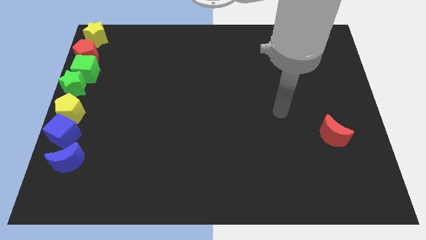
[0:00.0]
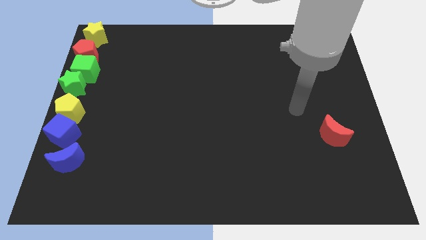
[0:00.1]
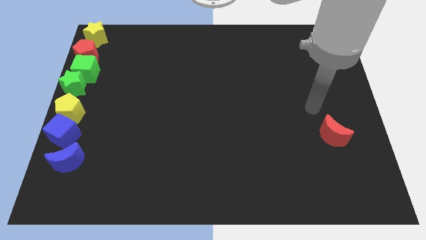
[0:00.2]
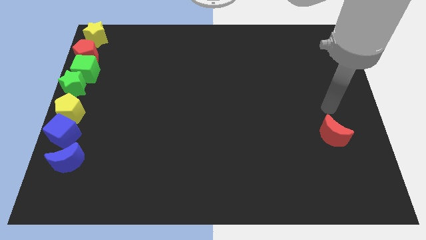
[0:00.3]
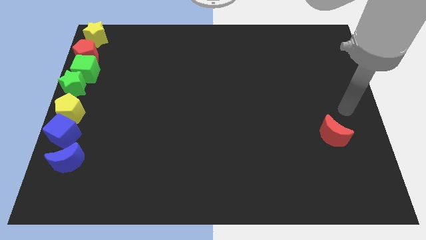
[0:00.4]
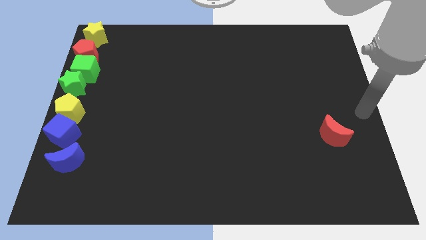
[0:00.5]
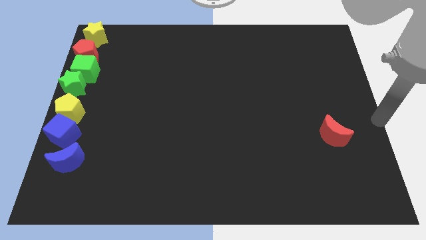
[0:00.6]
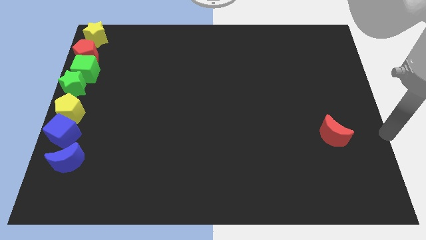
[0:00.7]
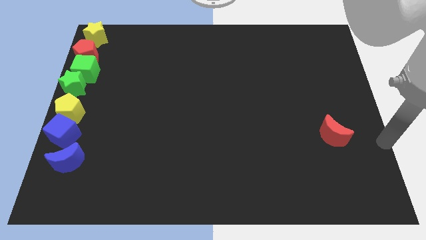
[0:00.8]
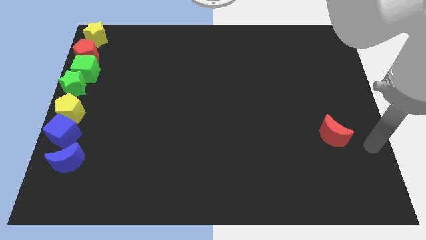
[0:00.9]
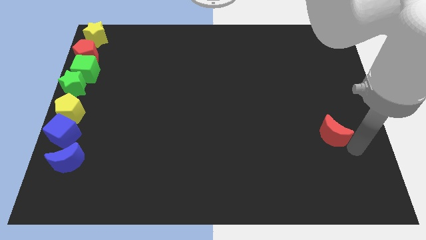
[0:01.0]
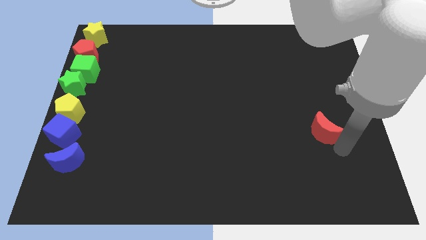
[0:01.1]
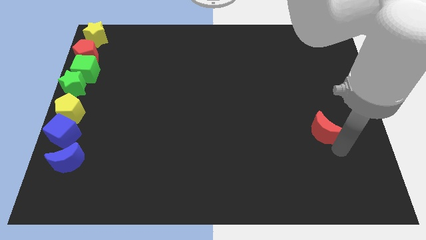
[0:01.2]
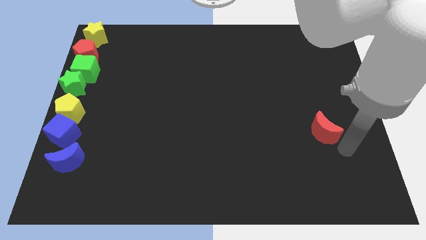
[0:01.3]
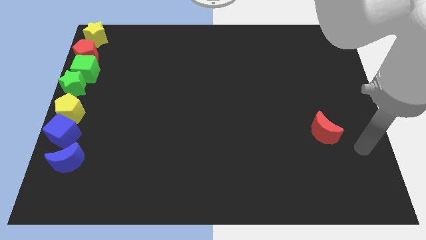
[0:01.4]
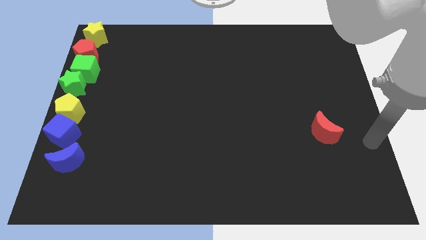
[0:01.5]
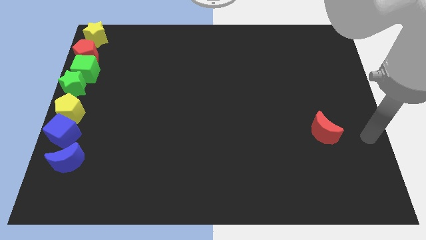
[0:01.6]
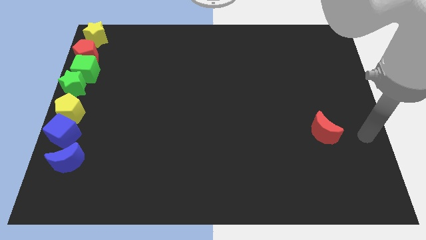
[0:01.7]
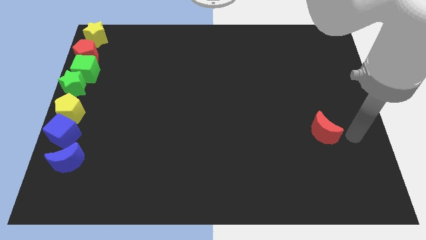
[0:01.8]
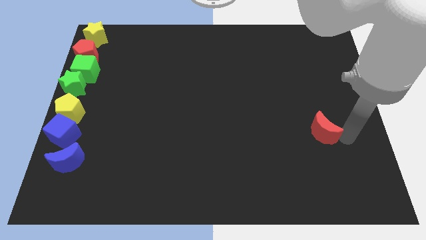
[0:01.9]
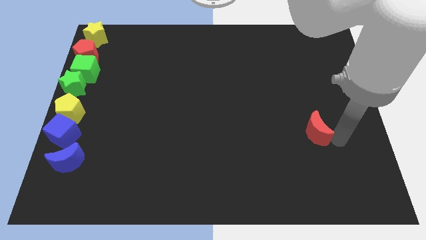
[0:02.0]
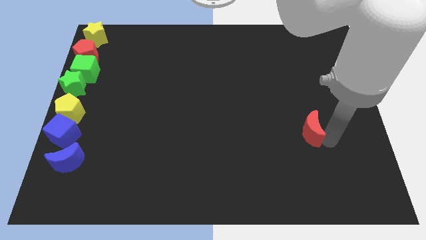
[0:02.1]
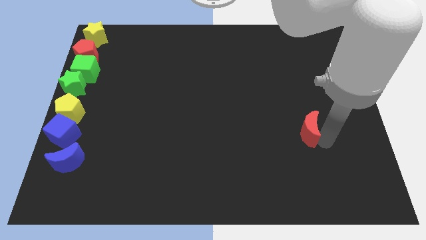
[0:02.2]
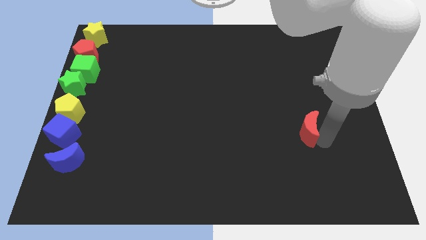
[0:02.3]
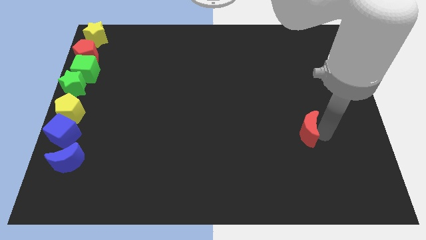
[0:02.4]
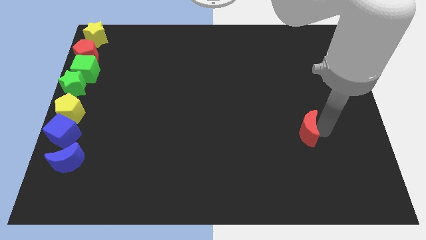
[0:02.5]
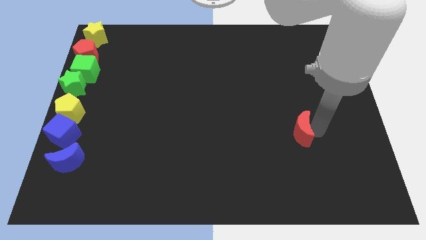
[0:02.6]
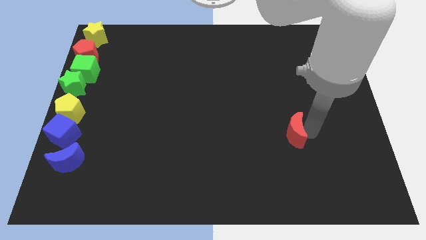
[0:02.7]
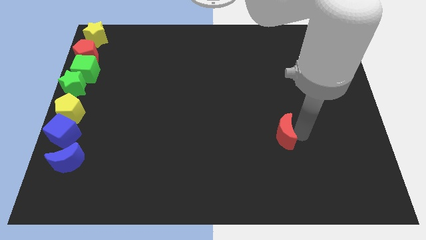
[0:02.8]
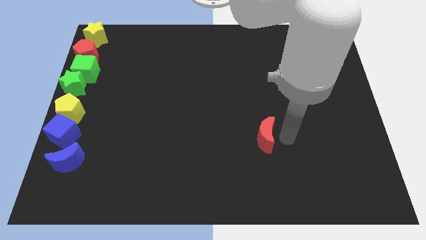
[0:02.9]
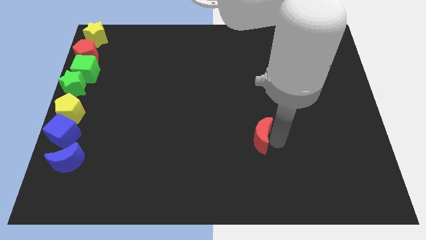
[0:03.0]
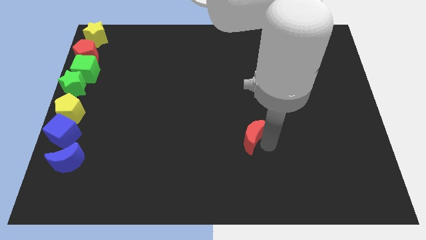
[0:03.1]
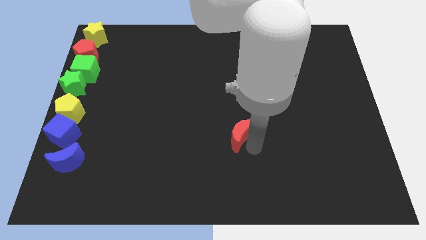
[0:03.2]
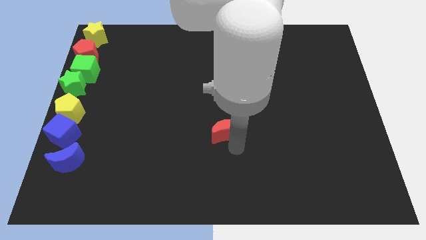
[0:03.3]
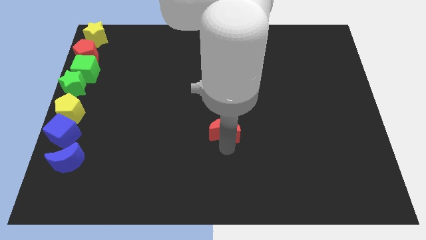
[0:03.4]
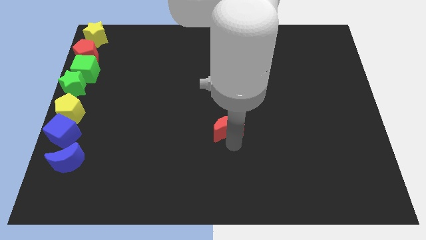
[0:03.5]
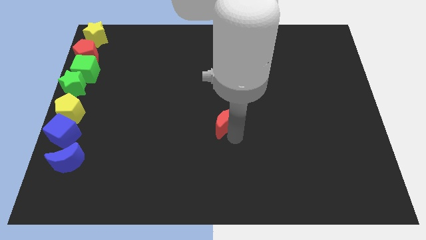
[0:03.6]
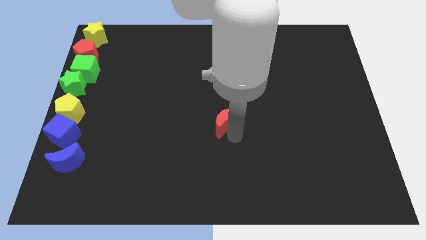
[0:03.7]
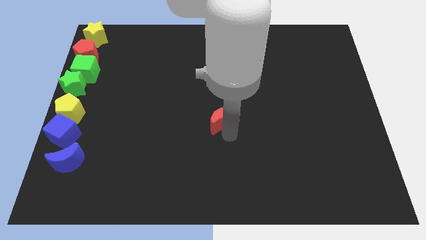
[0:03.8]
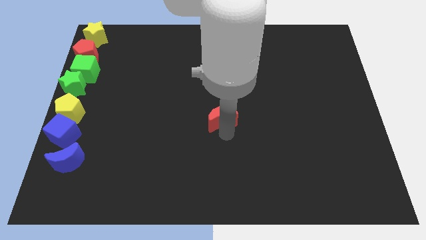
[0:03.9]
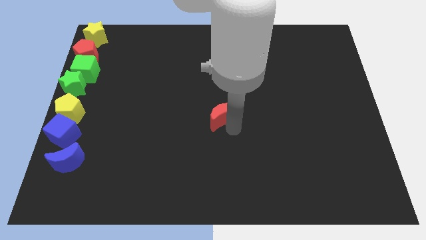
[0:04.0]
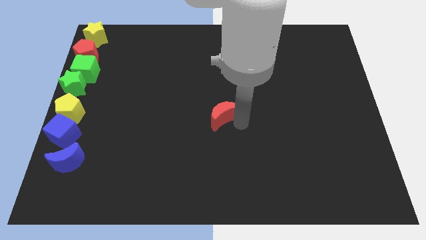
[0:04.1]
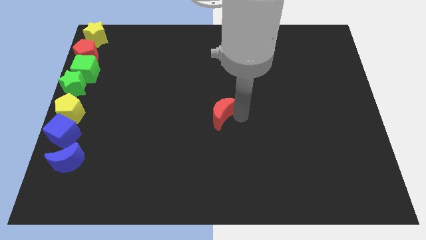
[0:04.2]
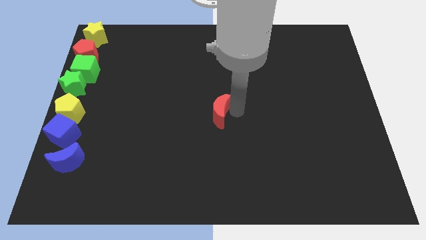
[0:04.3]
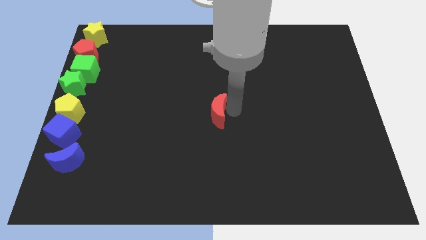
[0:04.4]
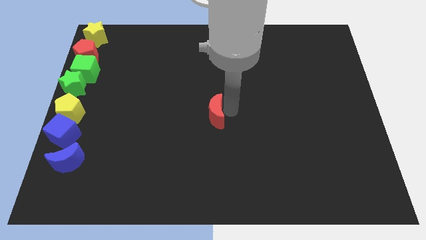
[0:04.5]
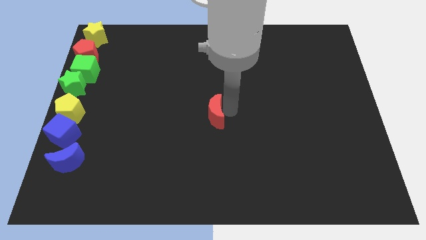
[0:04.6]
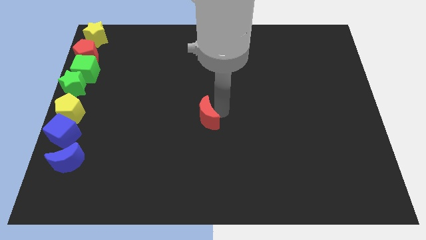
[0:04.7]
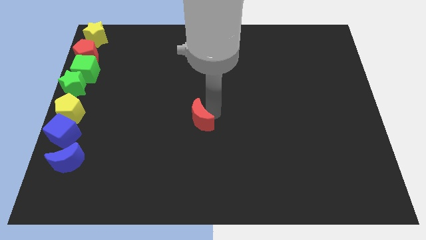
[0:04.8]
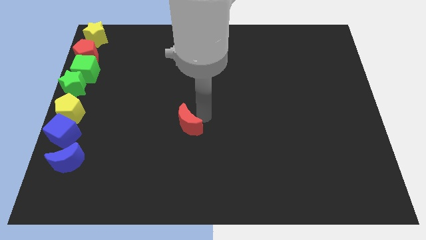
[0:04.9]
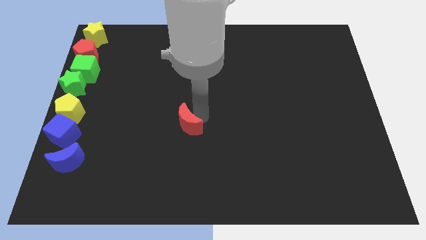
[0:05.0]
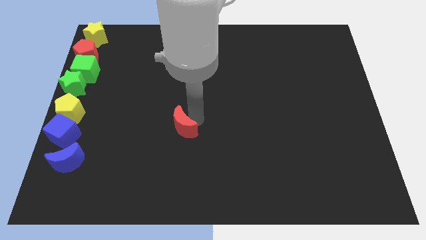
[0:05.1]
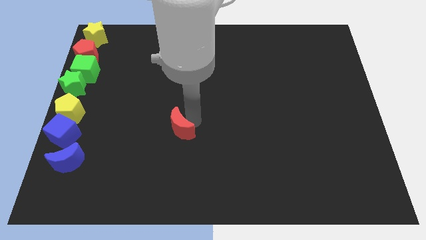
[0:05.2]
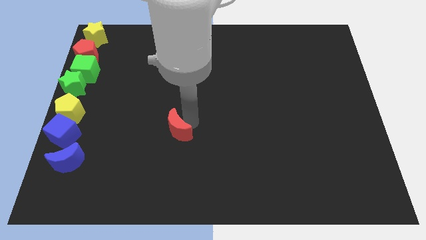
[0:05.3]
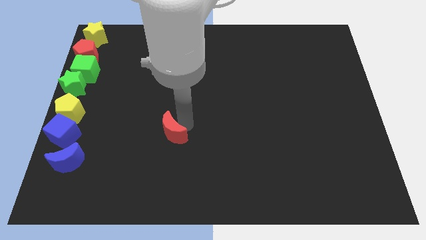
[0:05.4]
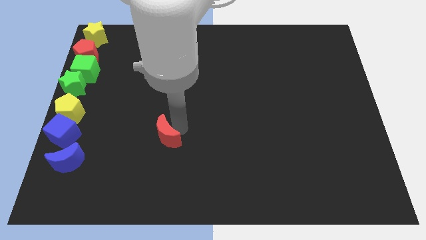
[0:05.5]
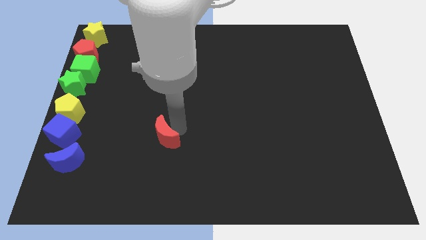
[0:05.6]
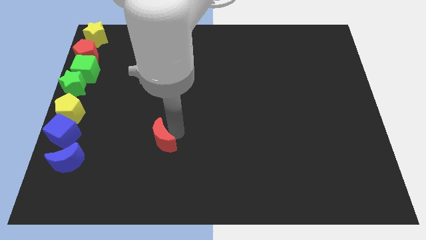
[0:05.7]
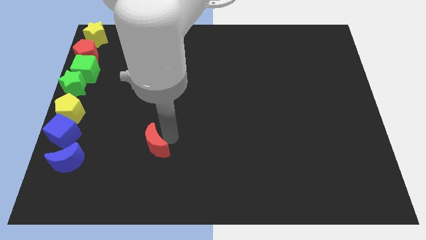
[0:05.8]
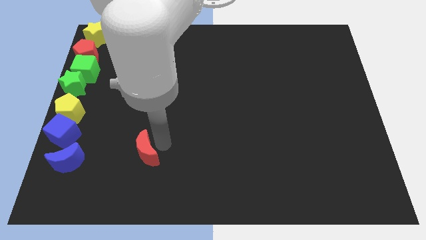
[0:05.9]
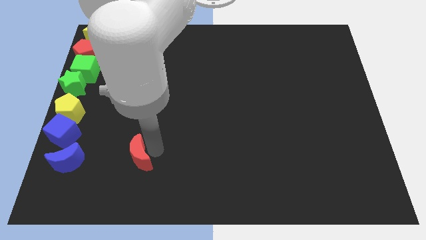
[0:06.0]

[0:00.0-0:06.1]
push the red moon towards the blue blocks

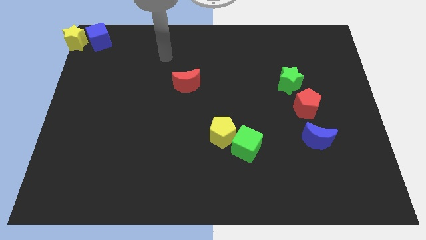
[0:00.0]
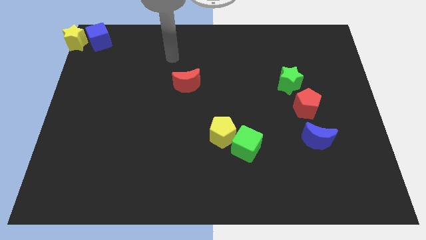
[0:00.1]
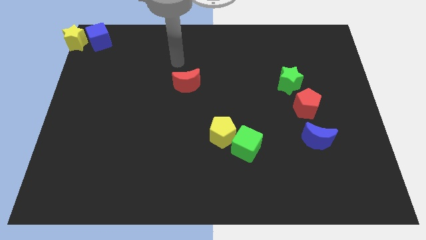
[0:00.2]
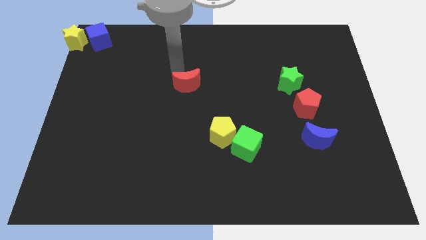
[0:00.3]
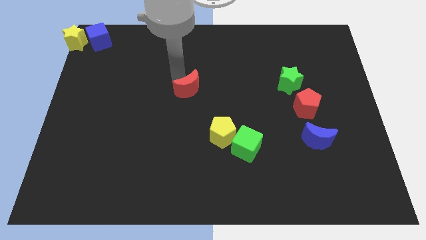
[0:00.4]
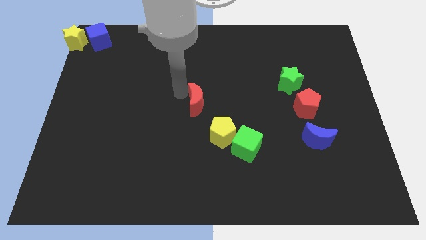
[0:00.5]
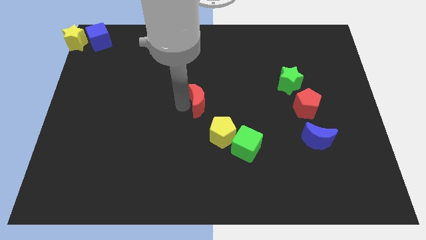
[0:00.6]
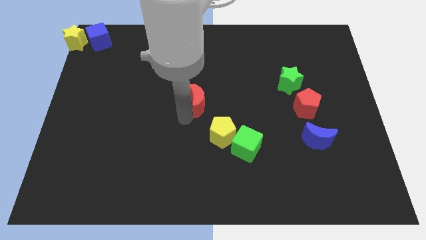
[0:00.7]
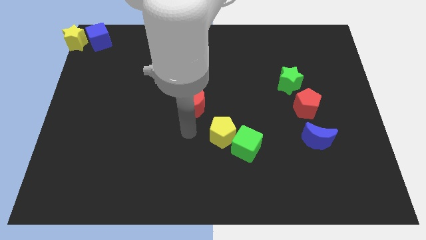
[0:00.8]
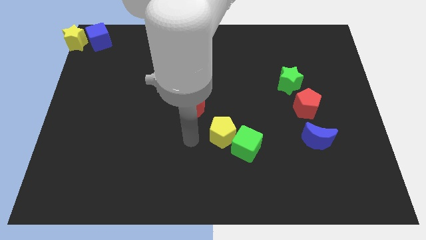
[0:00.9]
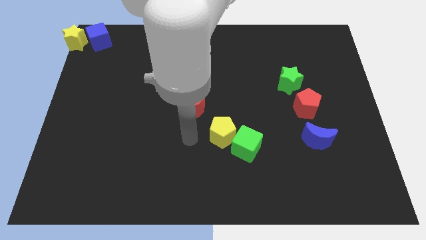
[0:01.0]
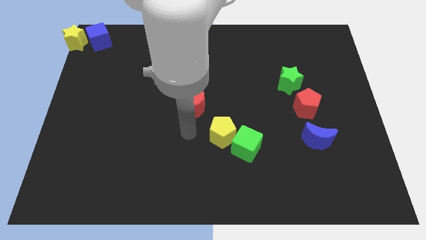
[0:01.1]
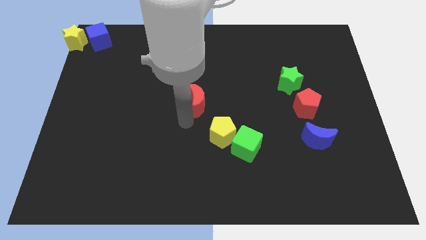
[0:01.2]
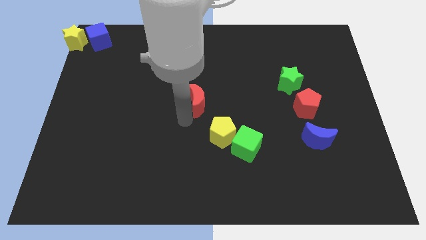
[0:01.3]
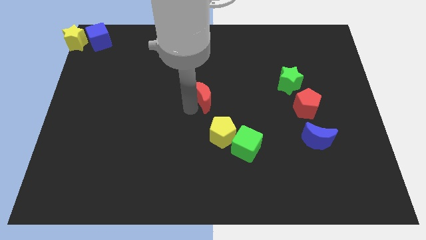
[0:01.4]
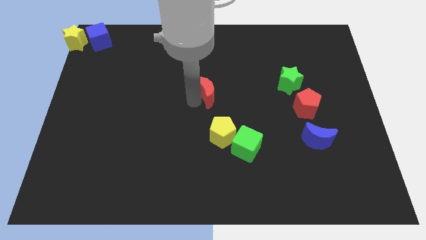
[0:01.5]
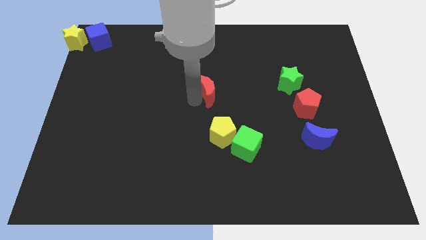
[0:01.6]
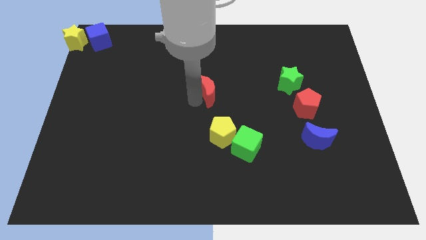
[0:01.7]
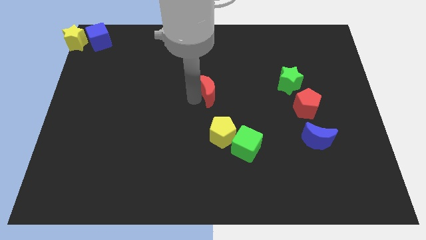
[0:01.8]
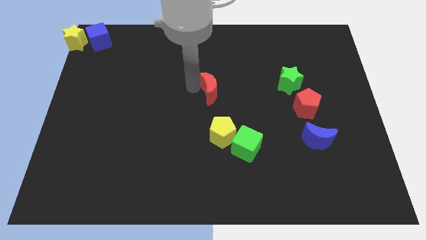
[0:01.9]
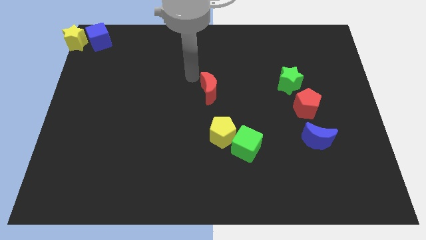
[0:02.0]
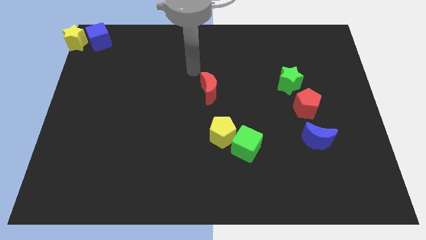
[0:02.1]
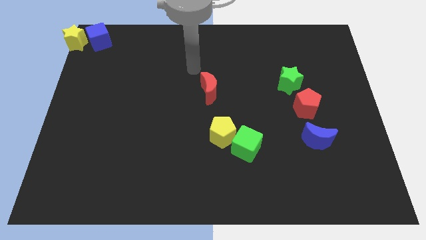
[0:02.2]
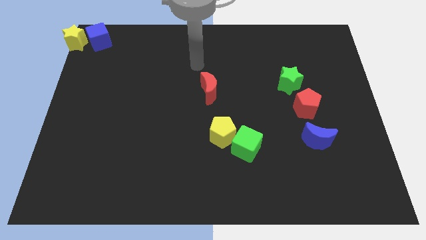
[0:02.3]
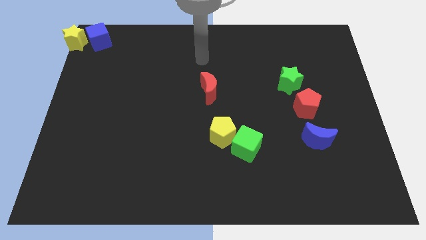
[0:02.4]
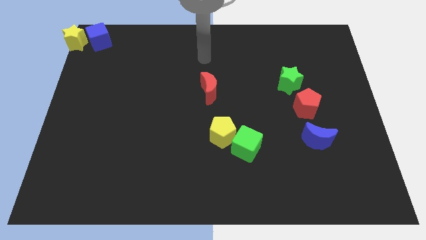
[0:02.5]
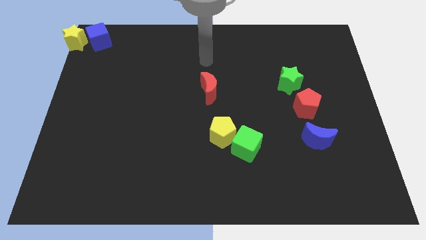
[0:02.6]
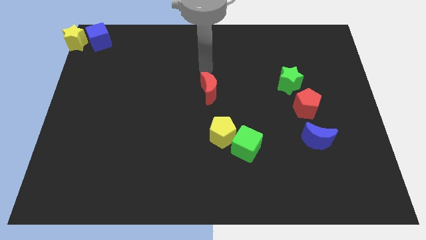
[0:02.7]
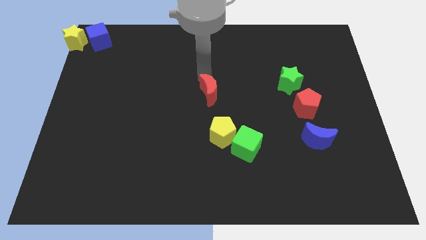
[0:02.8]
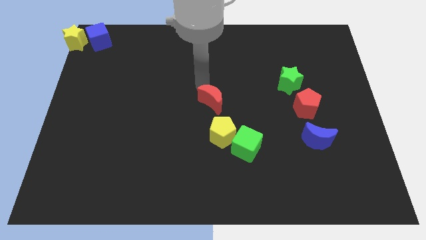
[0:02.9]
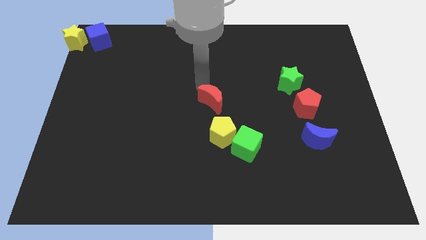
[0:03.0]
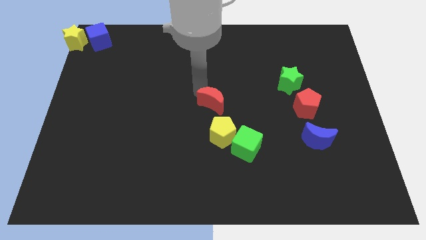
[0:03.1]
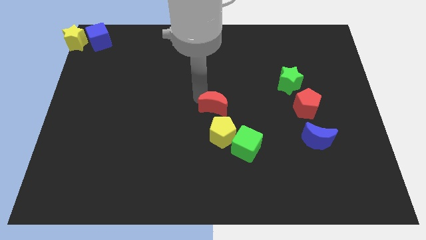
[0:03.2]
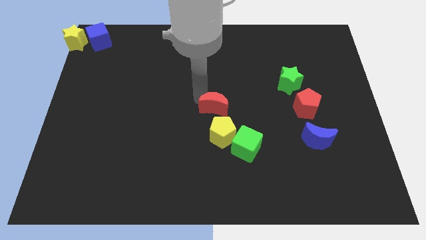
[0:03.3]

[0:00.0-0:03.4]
move the red crescent to the center of the board
